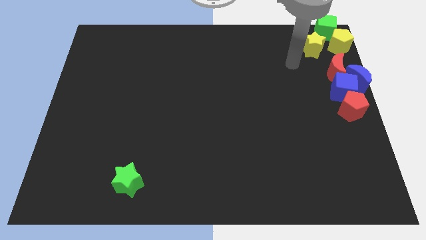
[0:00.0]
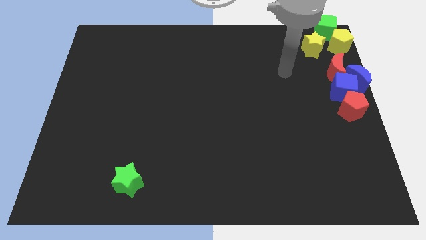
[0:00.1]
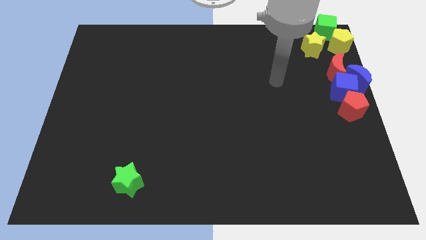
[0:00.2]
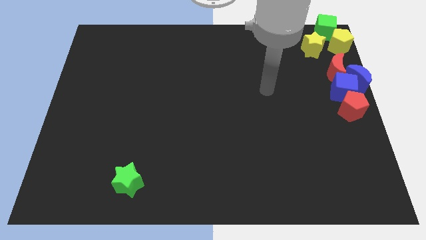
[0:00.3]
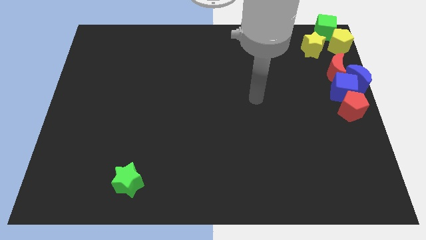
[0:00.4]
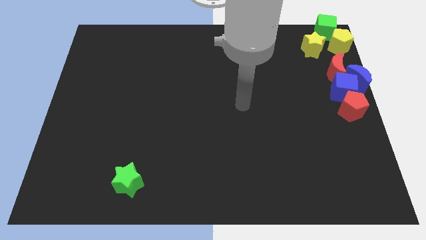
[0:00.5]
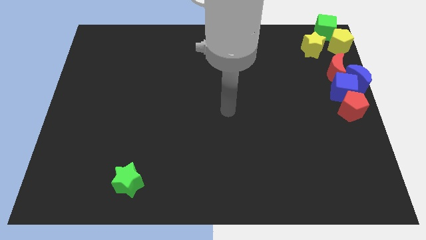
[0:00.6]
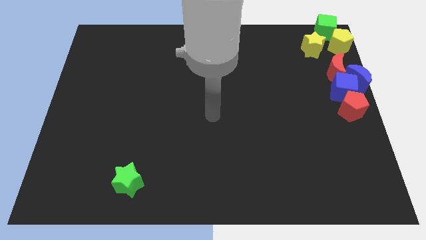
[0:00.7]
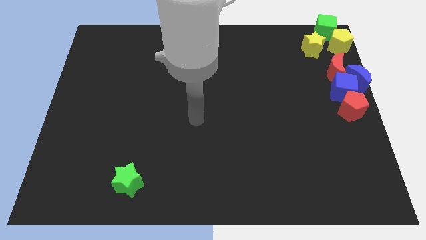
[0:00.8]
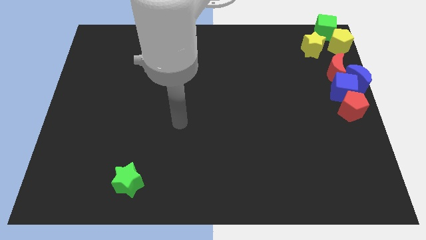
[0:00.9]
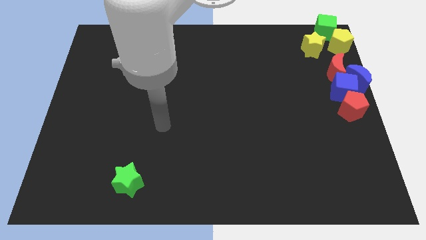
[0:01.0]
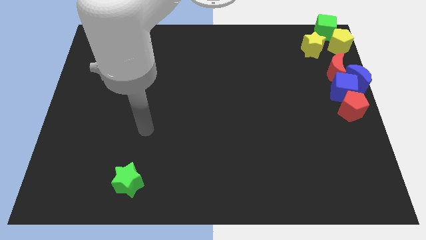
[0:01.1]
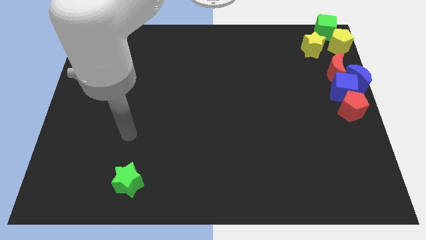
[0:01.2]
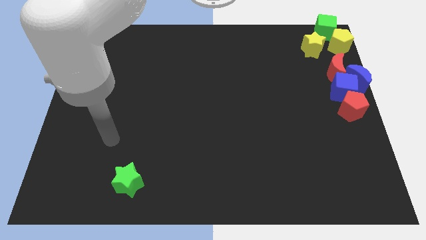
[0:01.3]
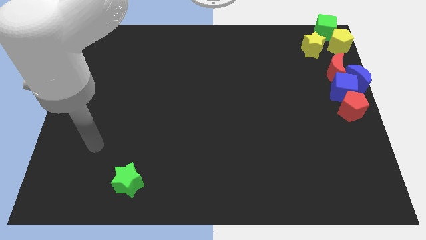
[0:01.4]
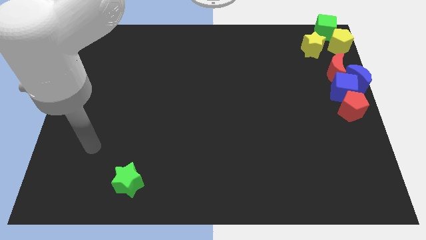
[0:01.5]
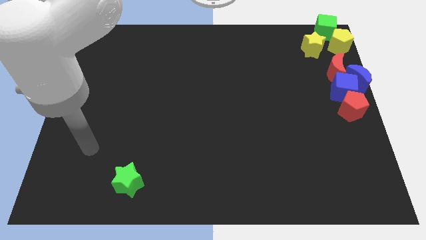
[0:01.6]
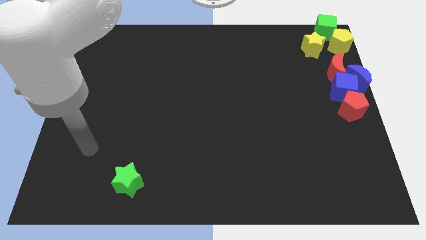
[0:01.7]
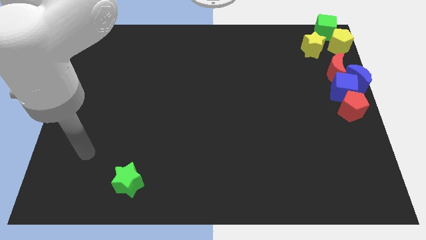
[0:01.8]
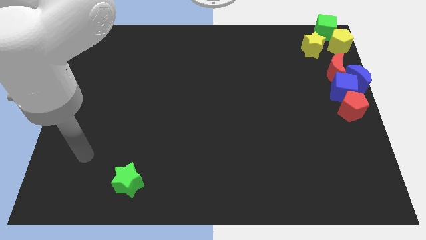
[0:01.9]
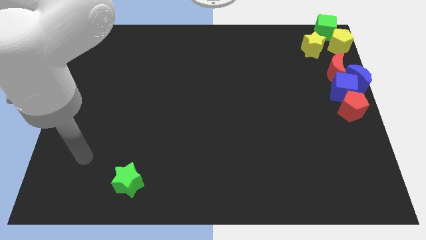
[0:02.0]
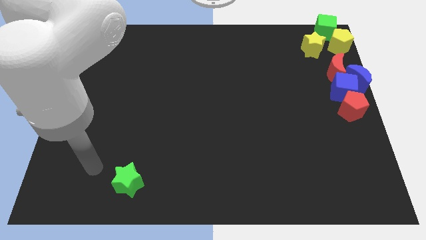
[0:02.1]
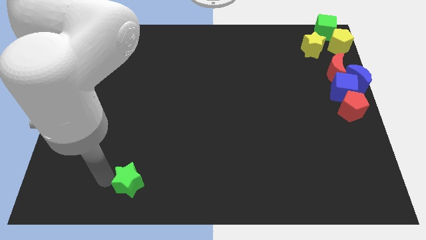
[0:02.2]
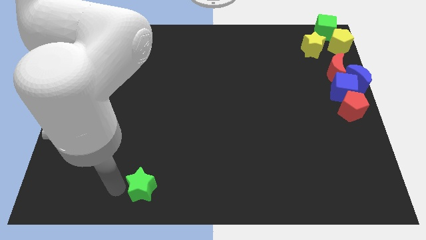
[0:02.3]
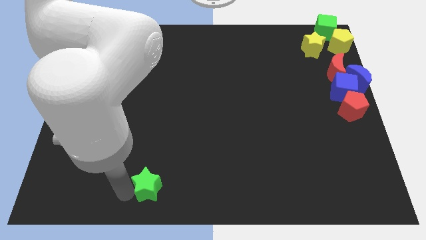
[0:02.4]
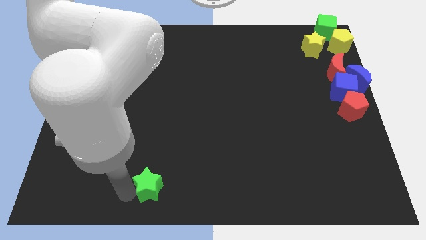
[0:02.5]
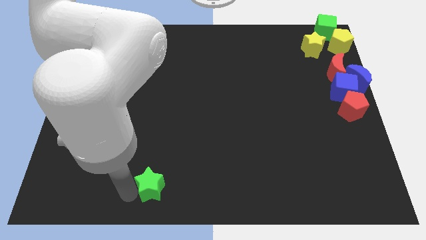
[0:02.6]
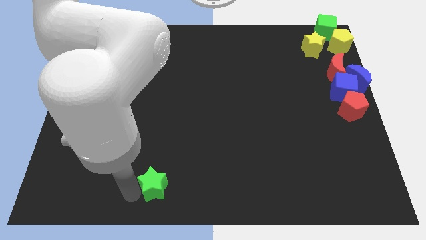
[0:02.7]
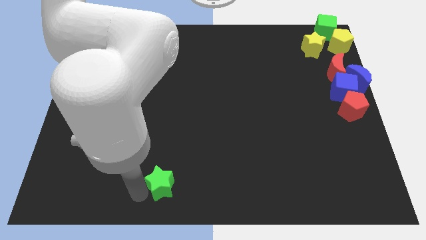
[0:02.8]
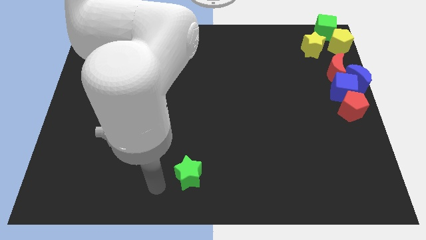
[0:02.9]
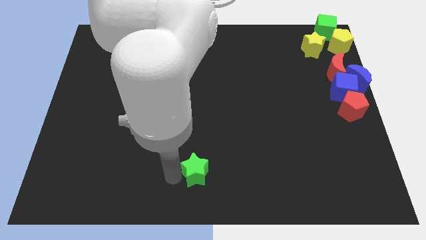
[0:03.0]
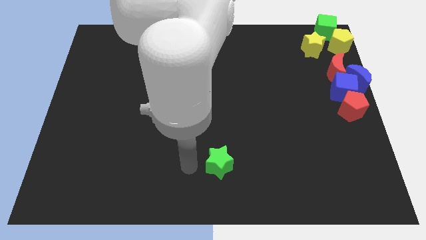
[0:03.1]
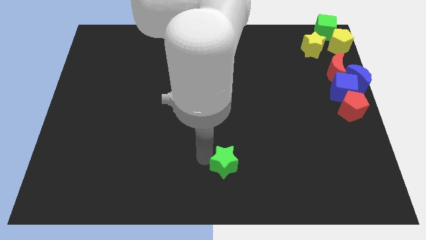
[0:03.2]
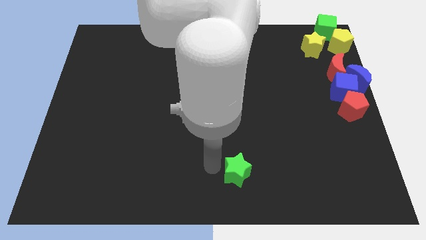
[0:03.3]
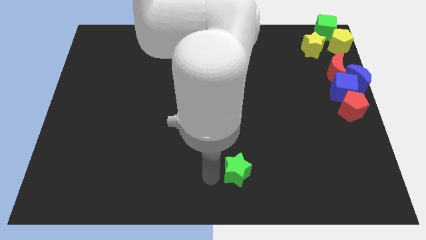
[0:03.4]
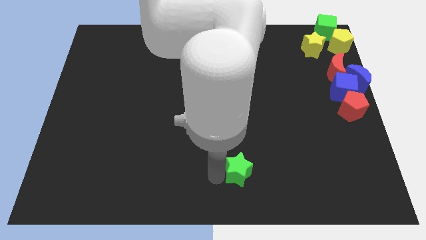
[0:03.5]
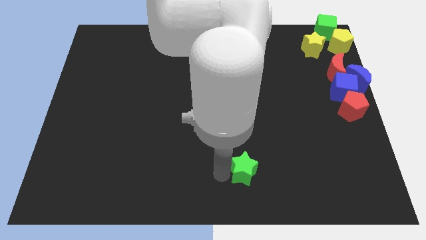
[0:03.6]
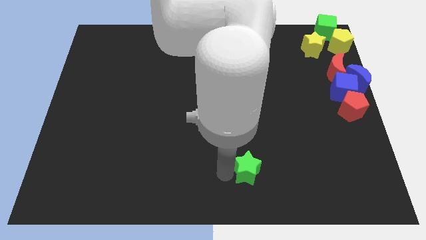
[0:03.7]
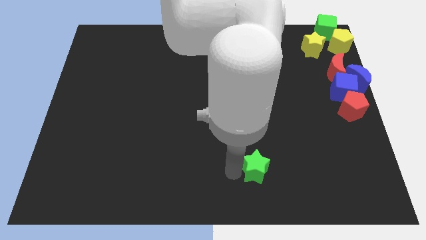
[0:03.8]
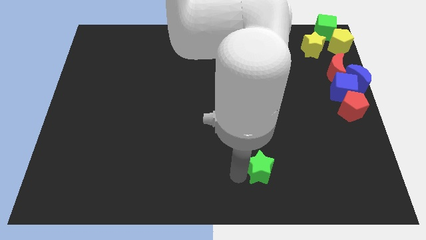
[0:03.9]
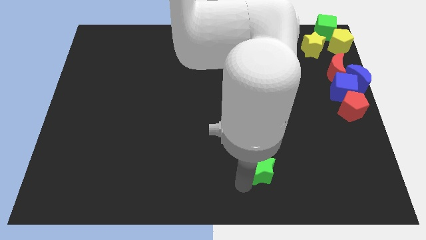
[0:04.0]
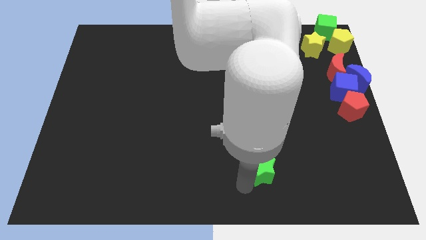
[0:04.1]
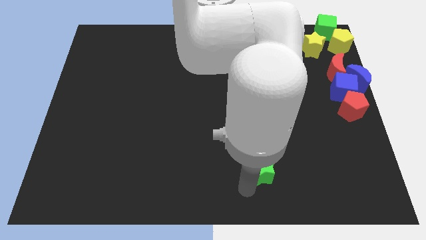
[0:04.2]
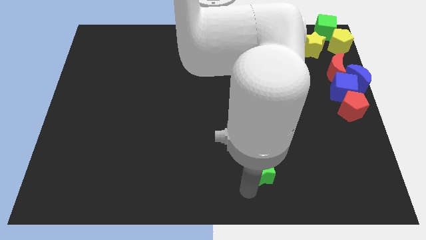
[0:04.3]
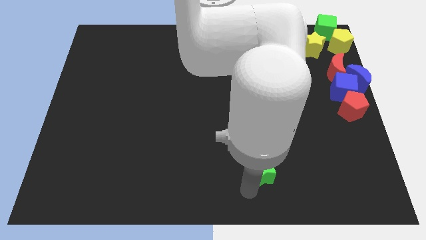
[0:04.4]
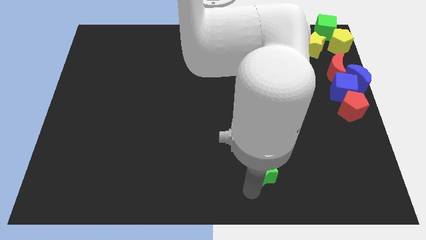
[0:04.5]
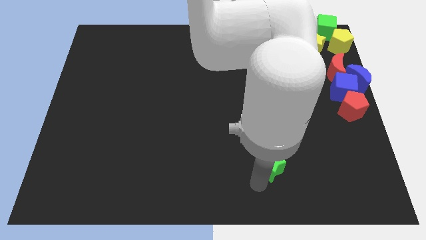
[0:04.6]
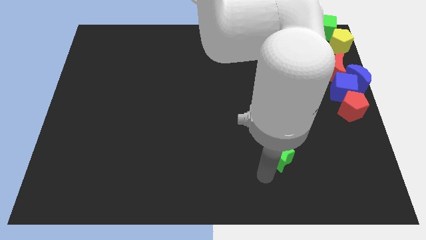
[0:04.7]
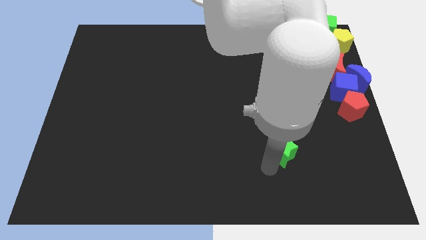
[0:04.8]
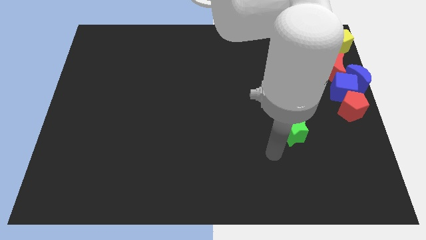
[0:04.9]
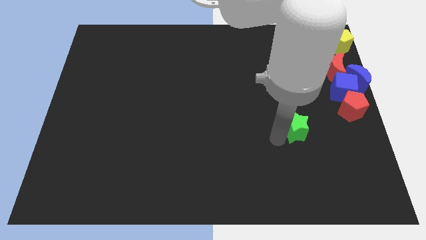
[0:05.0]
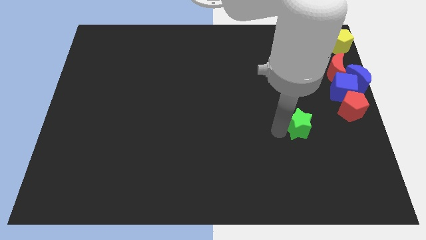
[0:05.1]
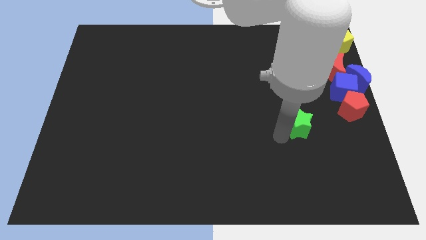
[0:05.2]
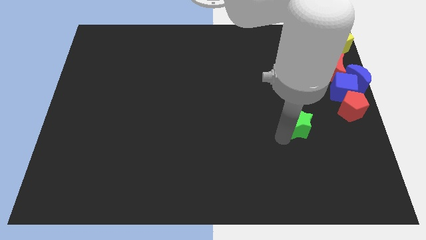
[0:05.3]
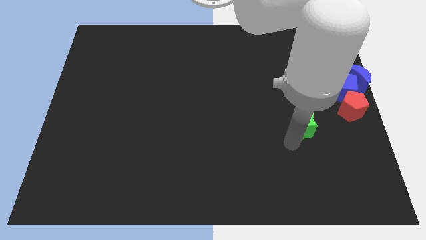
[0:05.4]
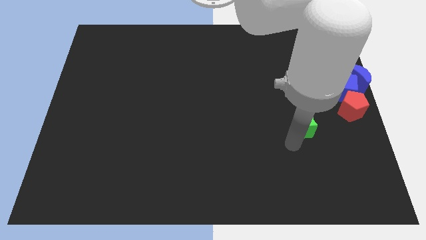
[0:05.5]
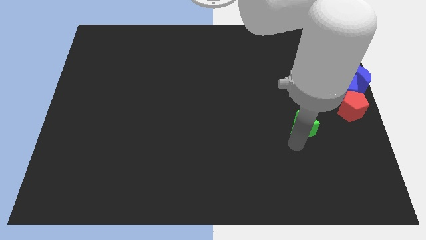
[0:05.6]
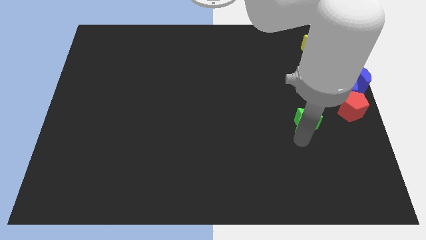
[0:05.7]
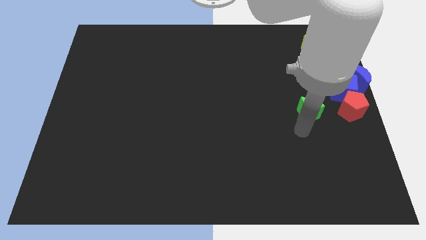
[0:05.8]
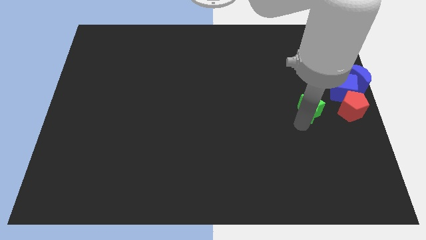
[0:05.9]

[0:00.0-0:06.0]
push the green star to the left of the red pentagon
